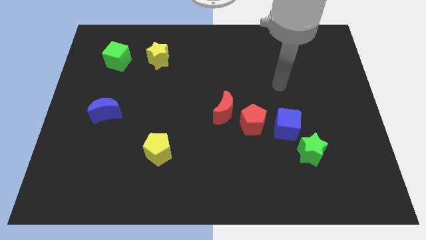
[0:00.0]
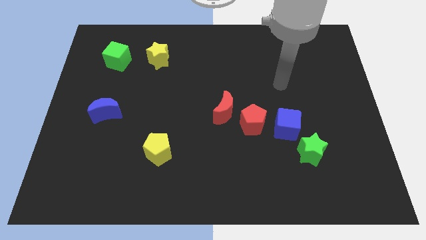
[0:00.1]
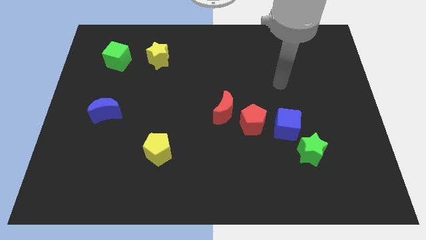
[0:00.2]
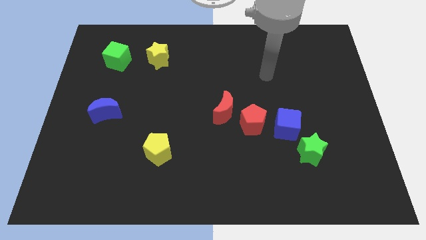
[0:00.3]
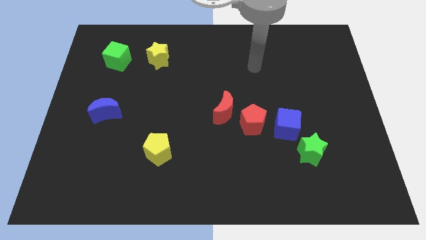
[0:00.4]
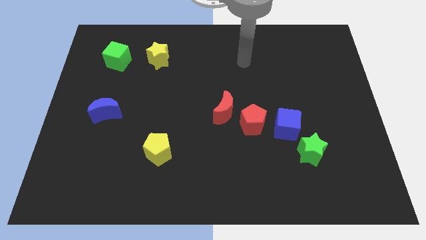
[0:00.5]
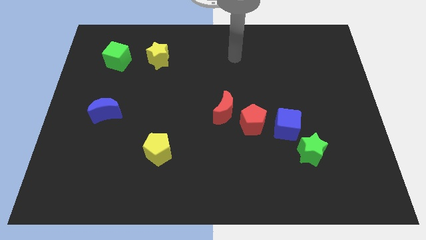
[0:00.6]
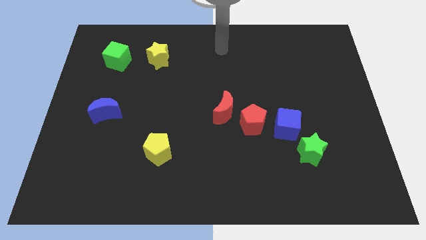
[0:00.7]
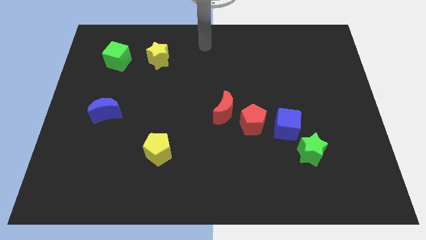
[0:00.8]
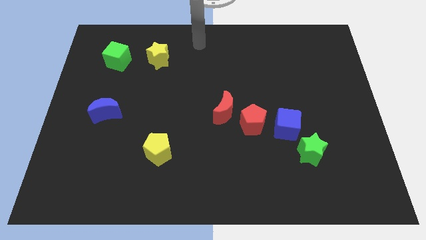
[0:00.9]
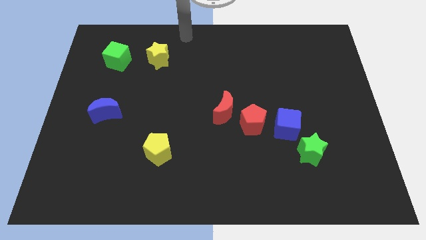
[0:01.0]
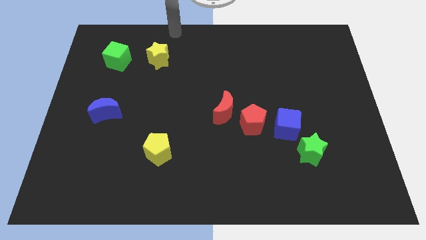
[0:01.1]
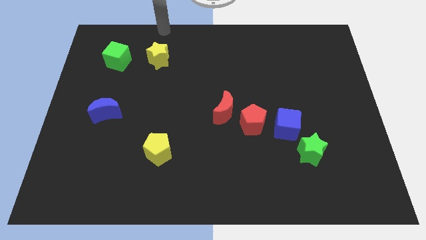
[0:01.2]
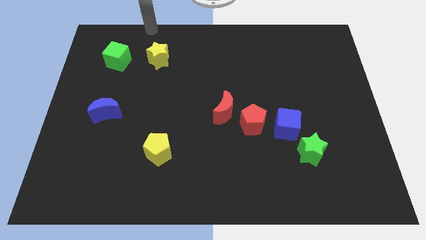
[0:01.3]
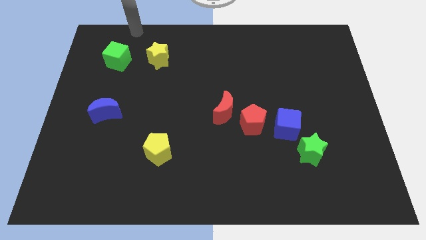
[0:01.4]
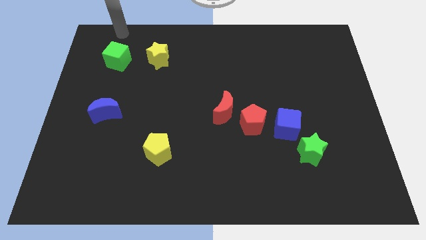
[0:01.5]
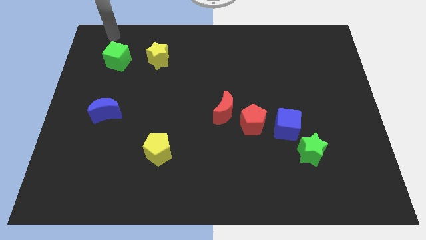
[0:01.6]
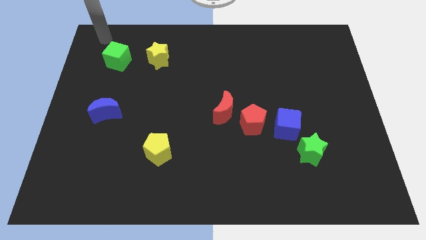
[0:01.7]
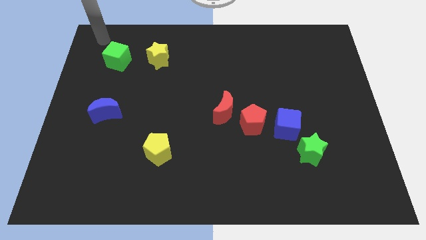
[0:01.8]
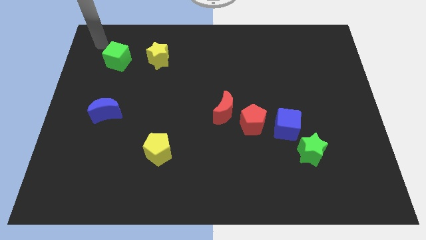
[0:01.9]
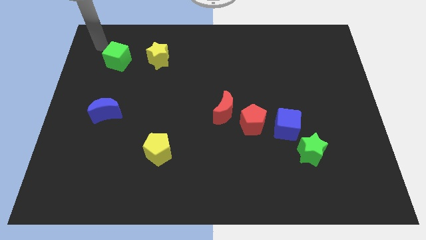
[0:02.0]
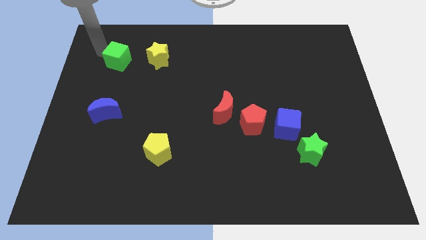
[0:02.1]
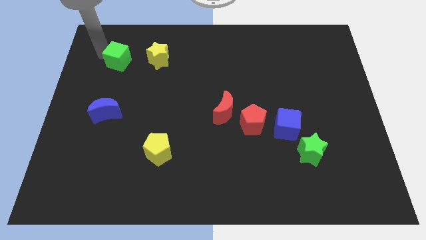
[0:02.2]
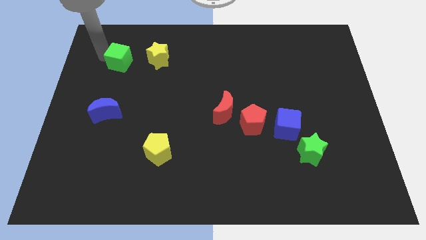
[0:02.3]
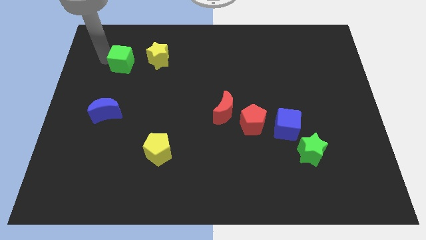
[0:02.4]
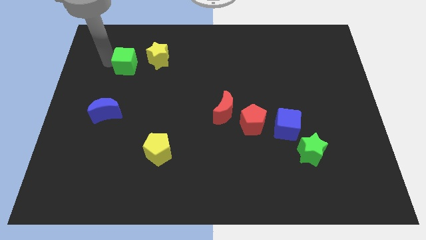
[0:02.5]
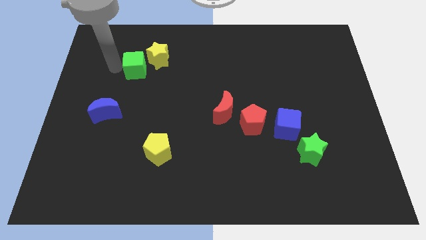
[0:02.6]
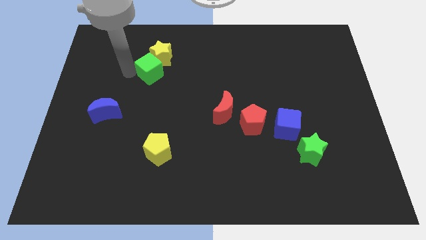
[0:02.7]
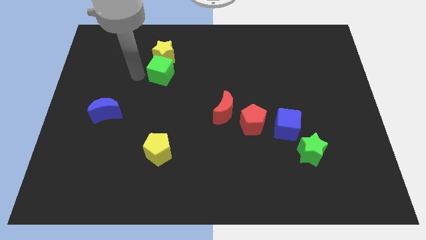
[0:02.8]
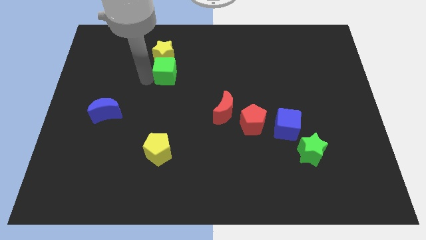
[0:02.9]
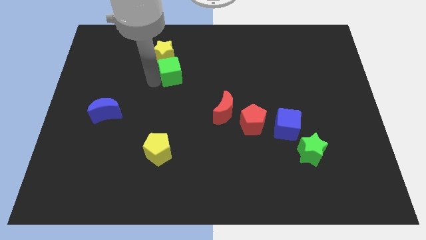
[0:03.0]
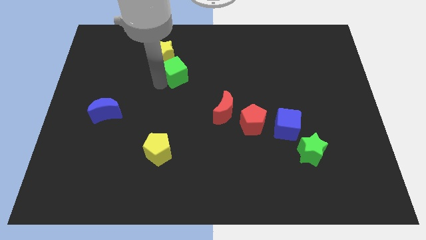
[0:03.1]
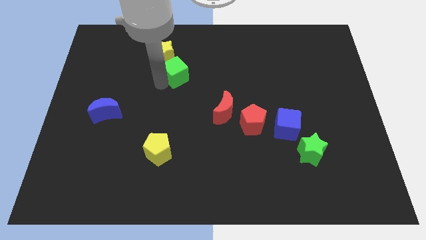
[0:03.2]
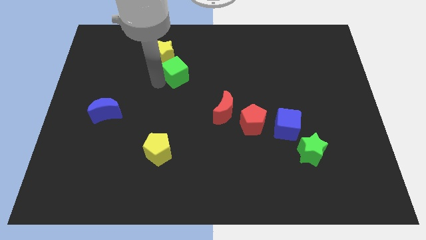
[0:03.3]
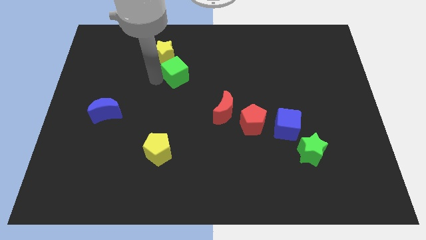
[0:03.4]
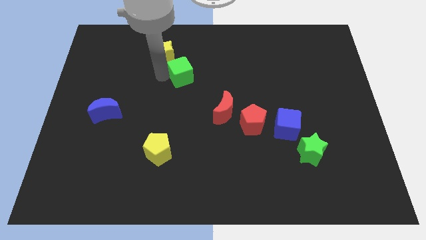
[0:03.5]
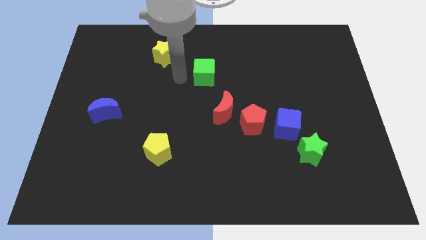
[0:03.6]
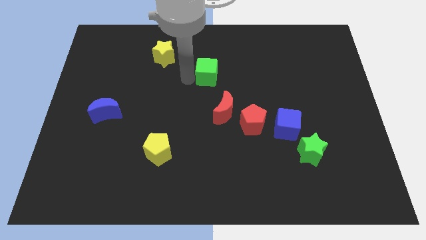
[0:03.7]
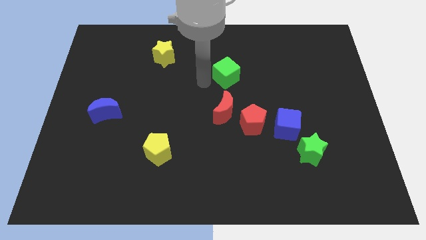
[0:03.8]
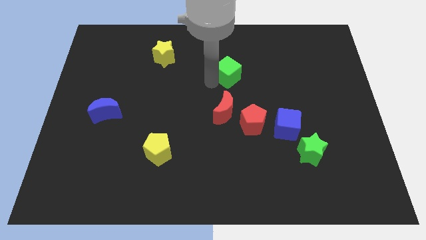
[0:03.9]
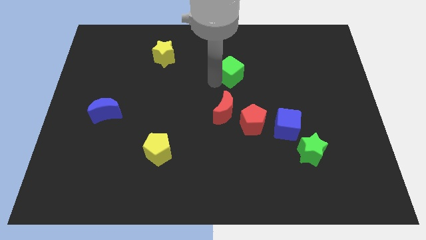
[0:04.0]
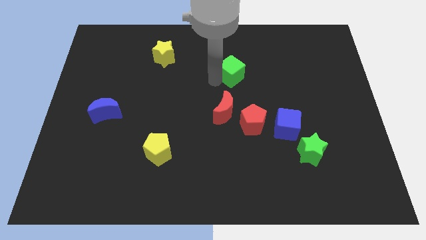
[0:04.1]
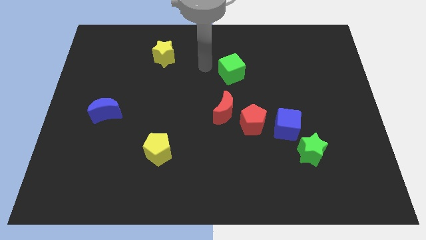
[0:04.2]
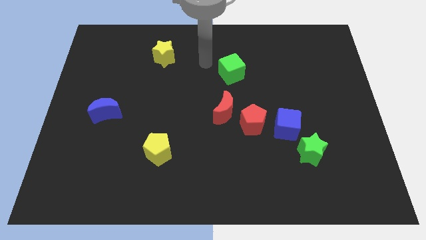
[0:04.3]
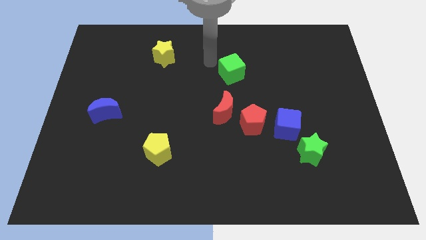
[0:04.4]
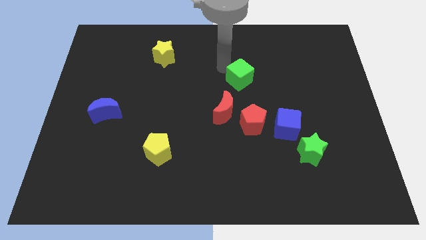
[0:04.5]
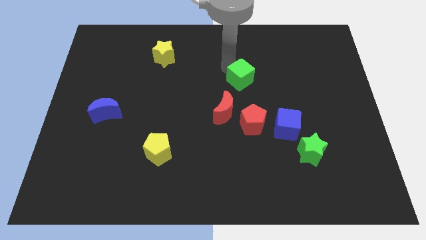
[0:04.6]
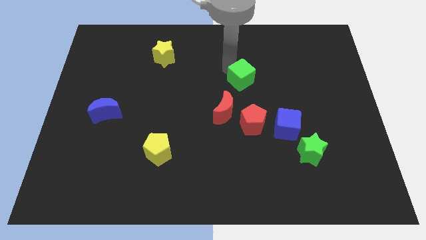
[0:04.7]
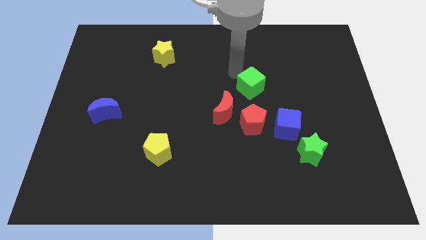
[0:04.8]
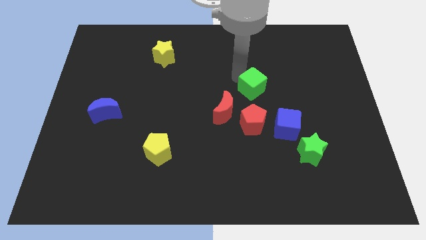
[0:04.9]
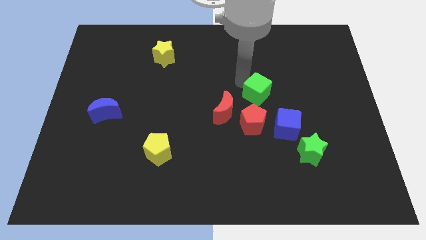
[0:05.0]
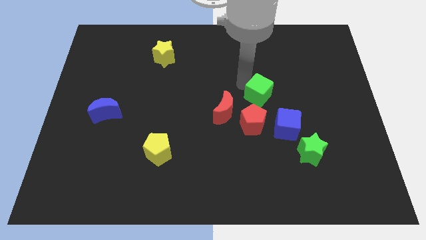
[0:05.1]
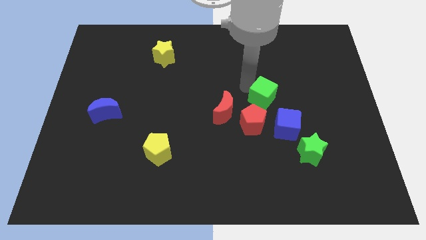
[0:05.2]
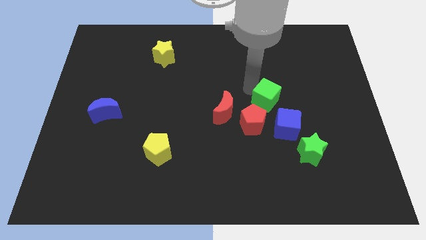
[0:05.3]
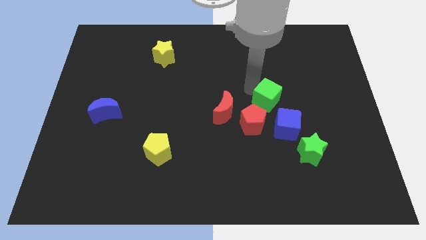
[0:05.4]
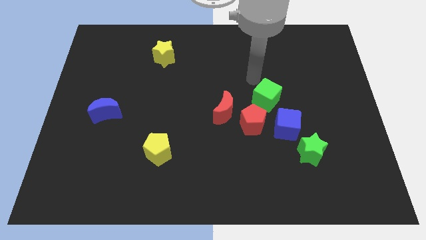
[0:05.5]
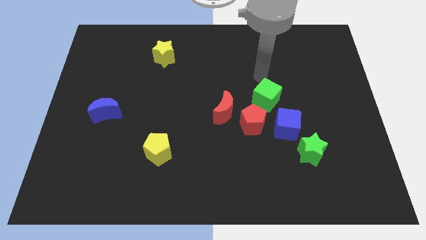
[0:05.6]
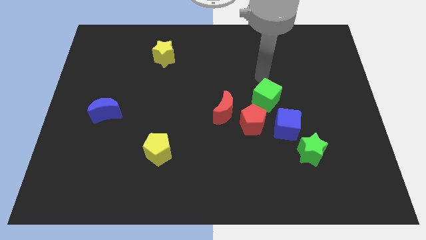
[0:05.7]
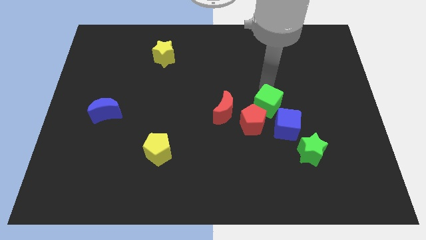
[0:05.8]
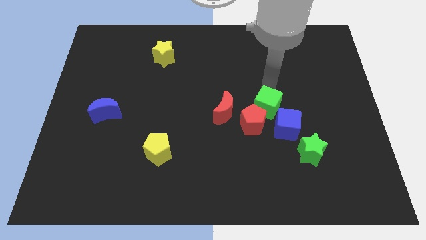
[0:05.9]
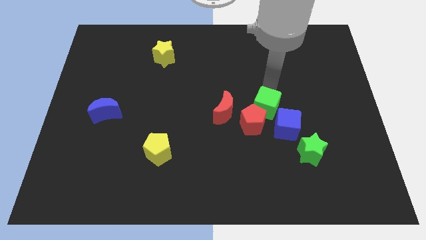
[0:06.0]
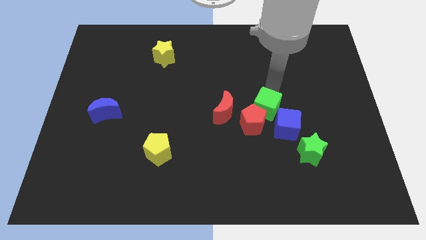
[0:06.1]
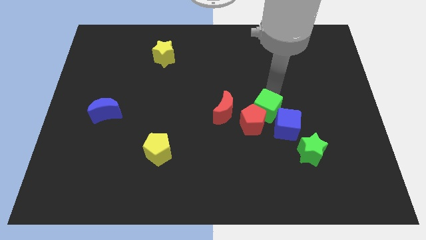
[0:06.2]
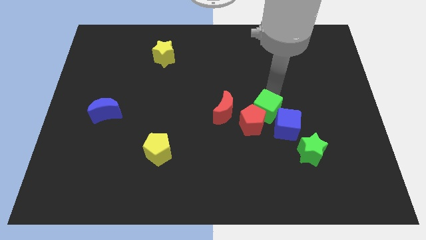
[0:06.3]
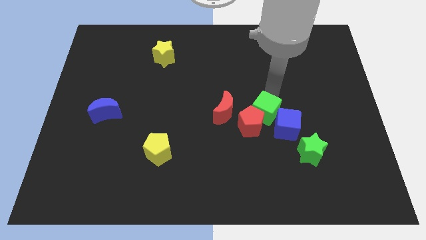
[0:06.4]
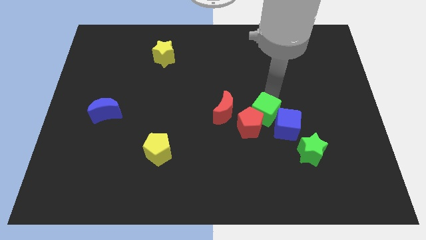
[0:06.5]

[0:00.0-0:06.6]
push the green cube to the blue cube

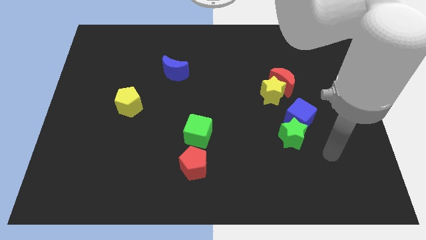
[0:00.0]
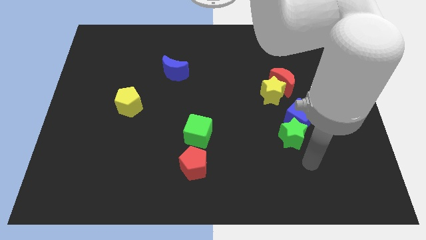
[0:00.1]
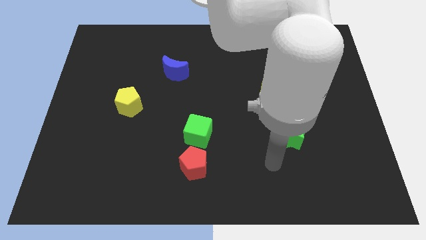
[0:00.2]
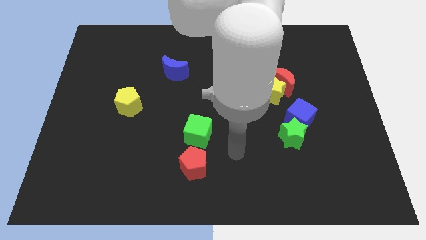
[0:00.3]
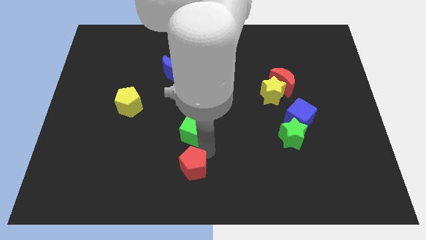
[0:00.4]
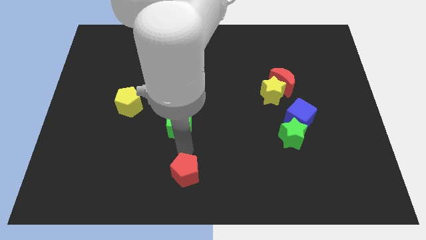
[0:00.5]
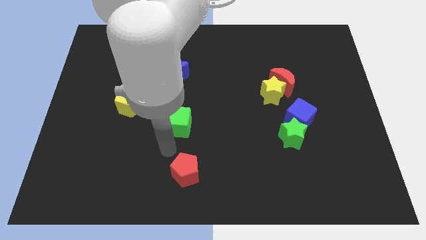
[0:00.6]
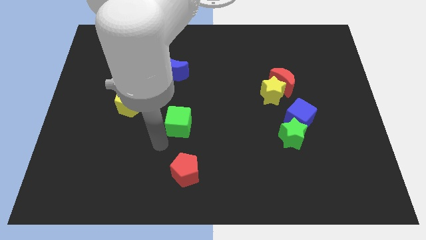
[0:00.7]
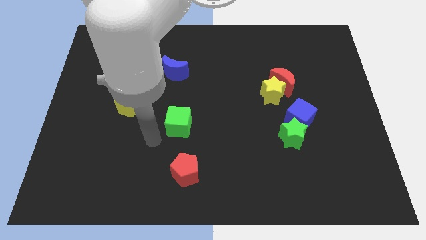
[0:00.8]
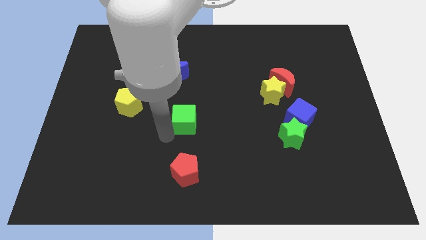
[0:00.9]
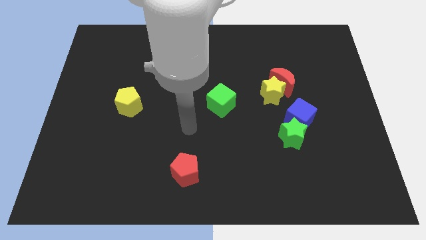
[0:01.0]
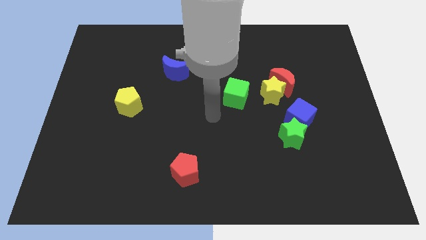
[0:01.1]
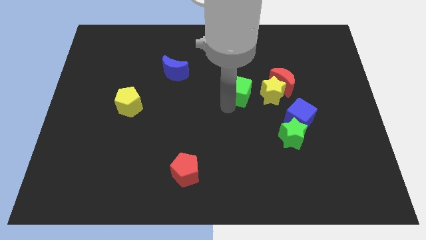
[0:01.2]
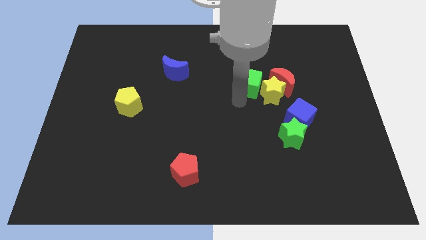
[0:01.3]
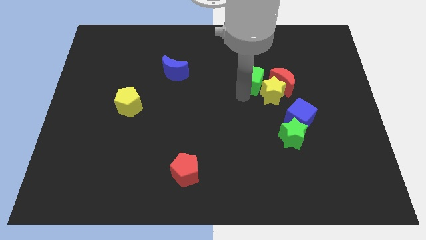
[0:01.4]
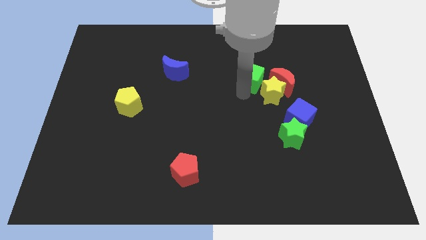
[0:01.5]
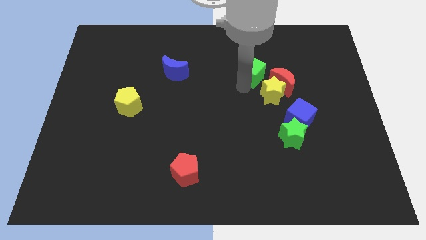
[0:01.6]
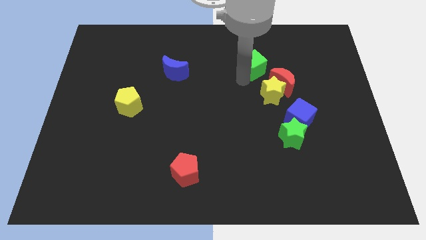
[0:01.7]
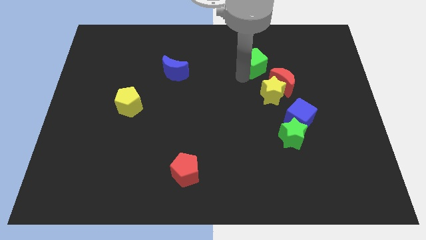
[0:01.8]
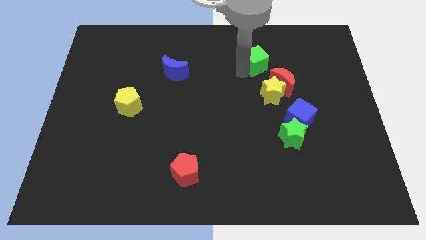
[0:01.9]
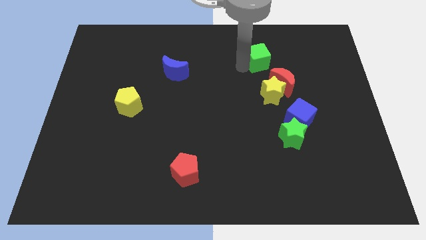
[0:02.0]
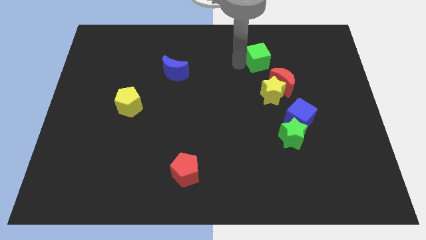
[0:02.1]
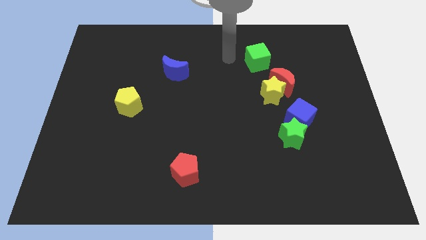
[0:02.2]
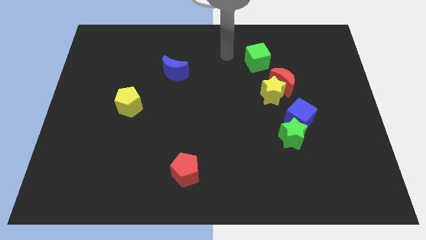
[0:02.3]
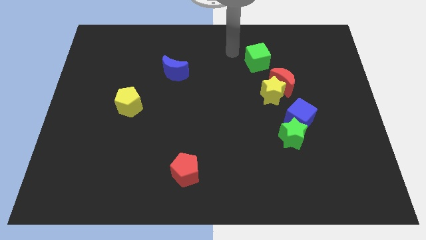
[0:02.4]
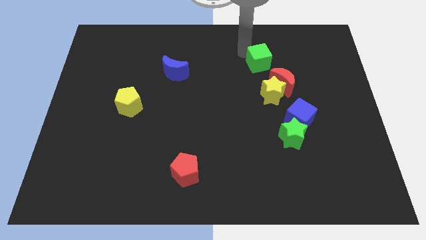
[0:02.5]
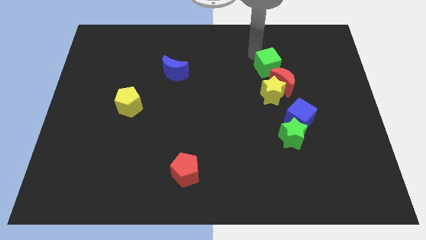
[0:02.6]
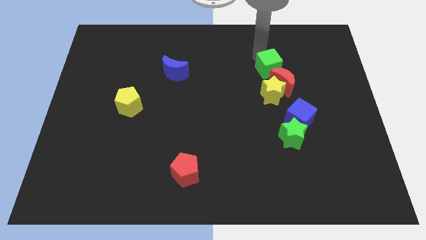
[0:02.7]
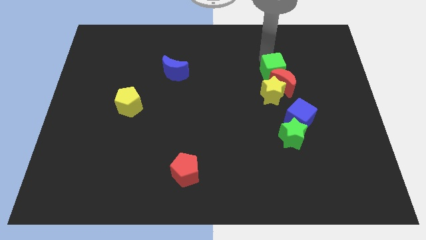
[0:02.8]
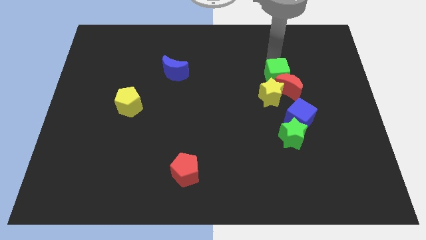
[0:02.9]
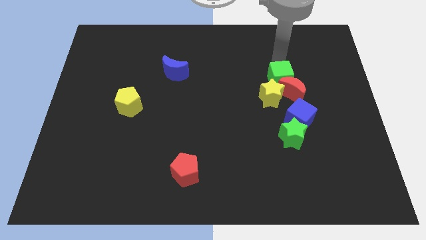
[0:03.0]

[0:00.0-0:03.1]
slide the green cube close to the red moon
